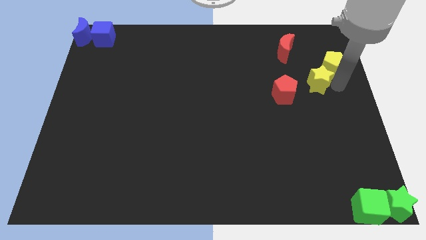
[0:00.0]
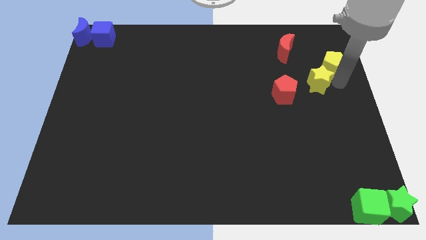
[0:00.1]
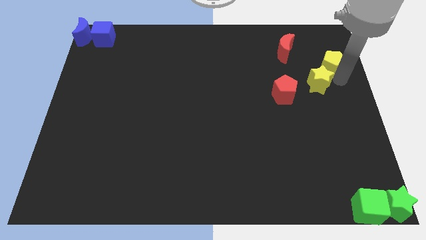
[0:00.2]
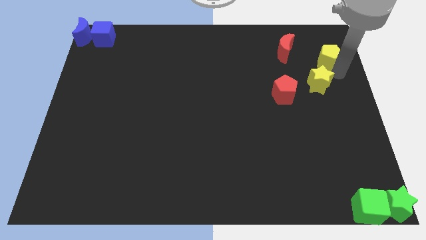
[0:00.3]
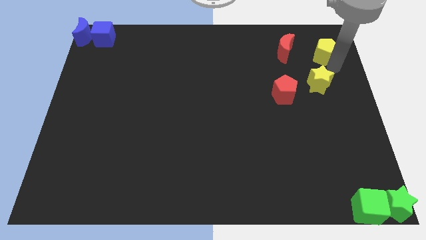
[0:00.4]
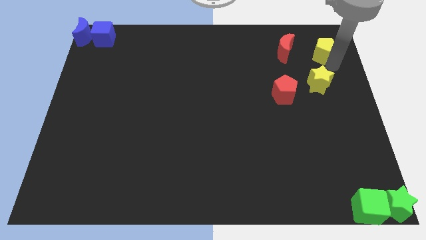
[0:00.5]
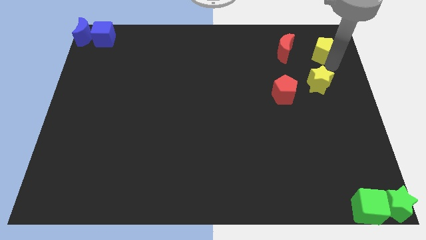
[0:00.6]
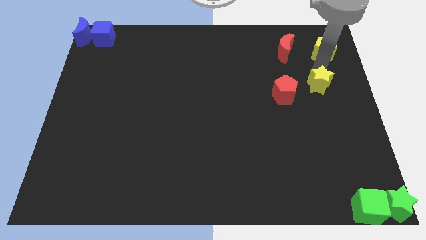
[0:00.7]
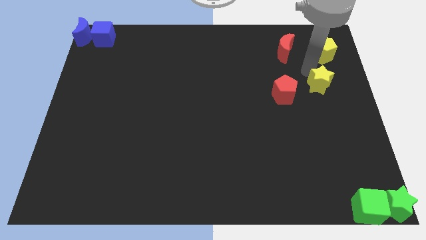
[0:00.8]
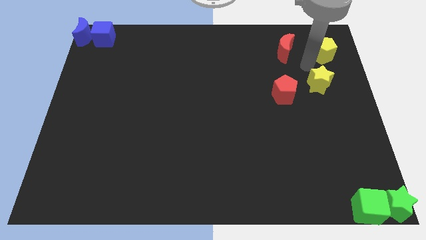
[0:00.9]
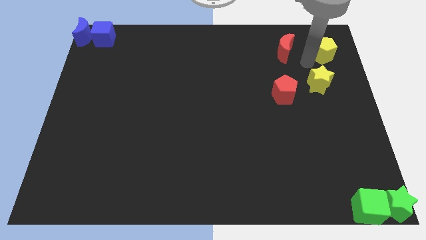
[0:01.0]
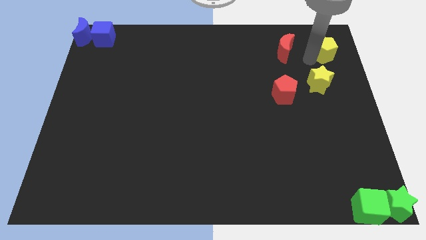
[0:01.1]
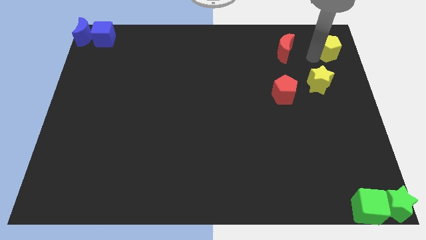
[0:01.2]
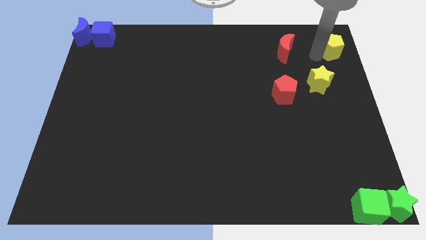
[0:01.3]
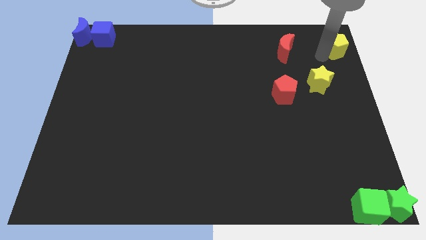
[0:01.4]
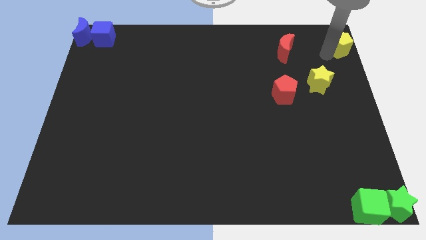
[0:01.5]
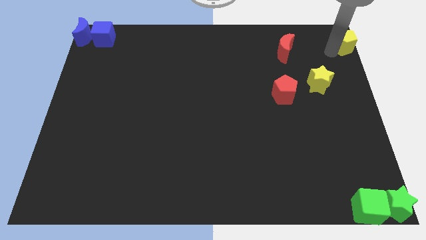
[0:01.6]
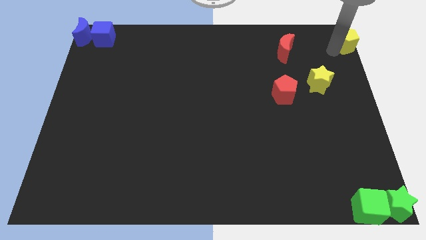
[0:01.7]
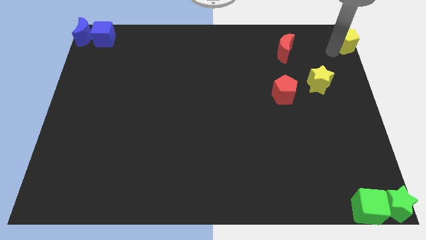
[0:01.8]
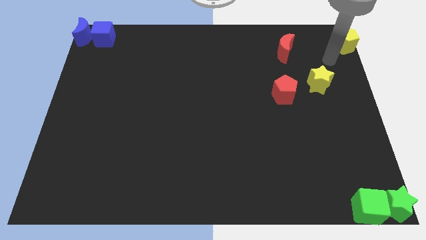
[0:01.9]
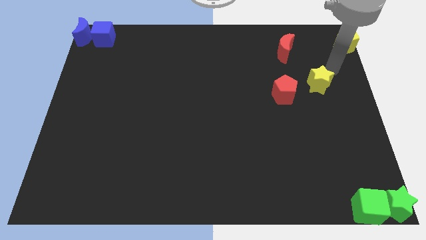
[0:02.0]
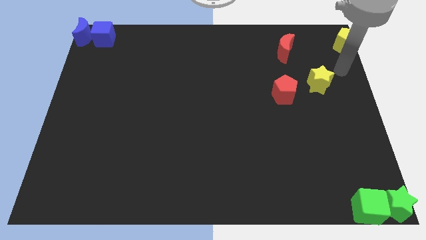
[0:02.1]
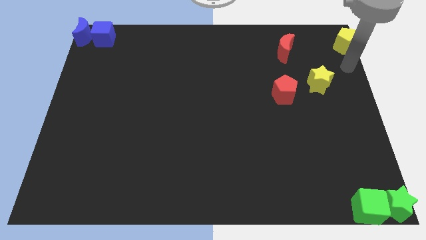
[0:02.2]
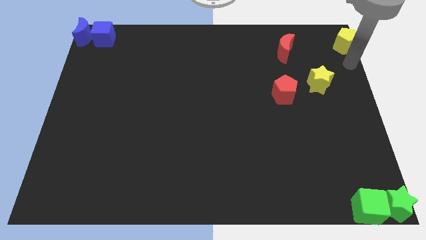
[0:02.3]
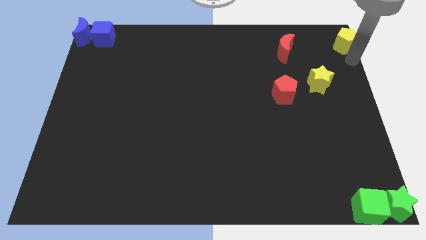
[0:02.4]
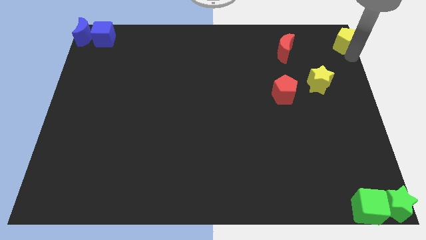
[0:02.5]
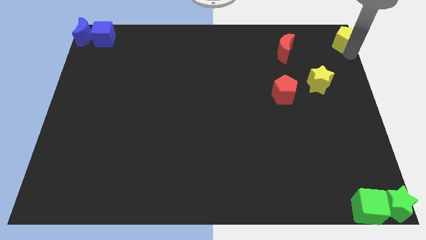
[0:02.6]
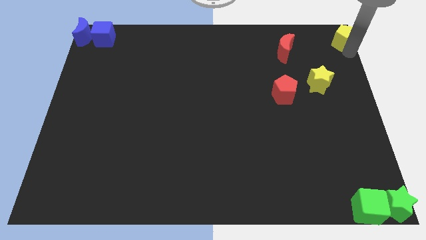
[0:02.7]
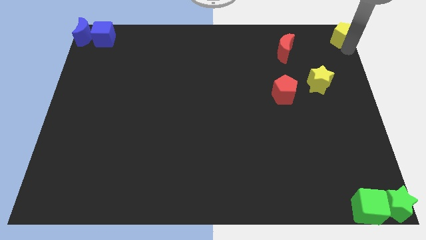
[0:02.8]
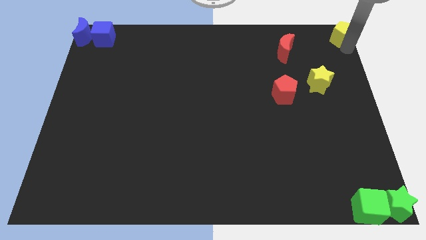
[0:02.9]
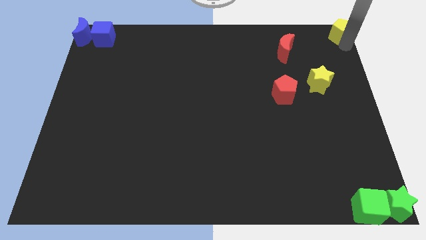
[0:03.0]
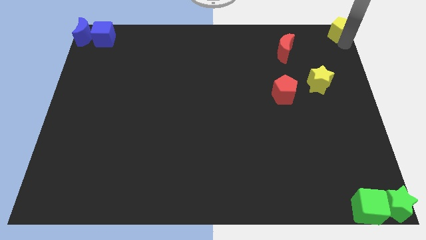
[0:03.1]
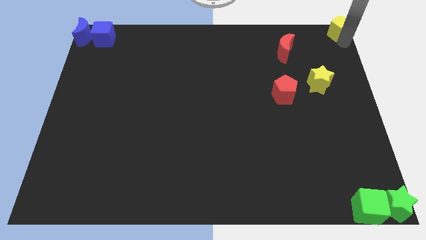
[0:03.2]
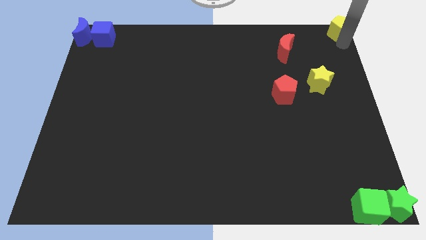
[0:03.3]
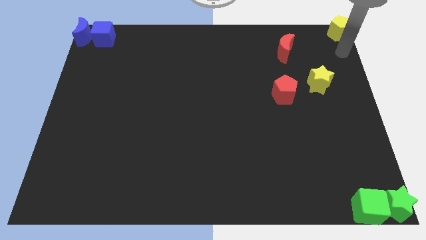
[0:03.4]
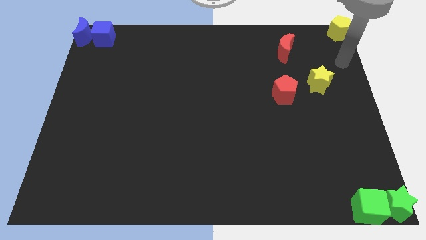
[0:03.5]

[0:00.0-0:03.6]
move the yellow pentagon to the top right corner of the board

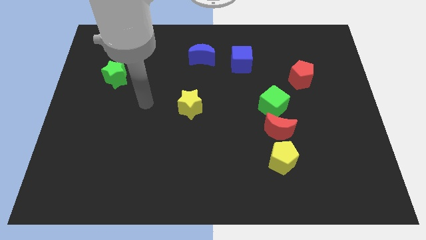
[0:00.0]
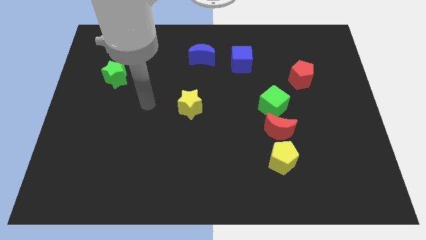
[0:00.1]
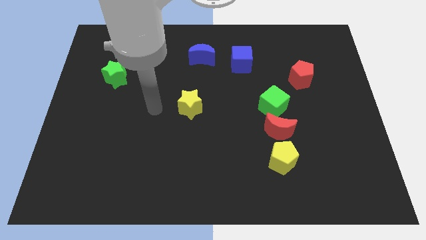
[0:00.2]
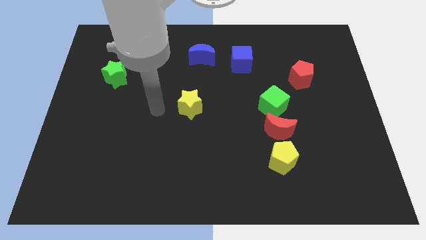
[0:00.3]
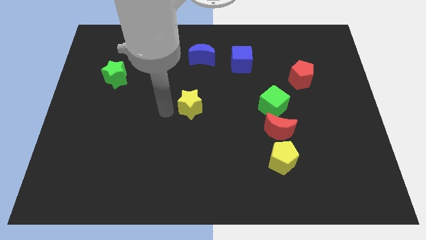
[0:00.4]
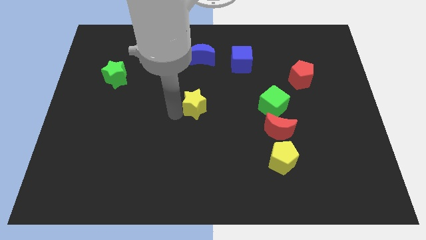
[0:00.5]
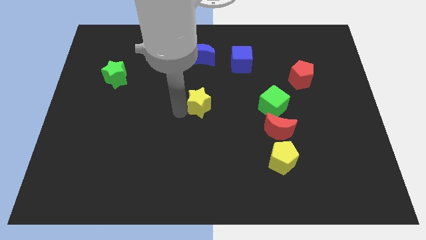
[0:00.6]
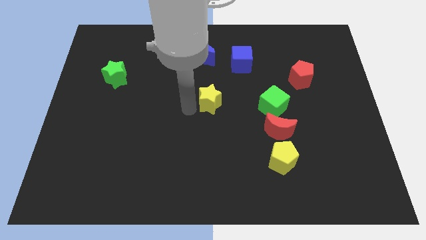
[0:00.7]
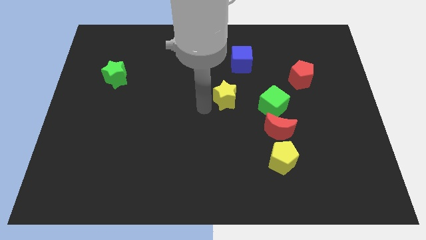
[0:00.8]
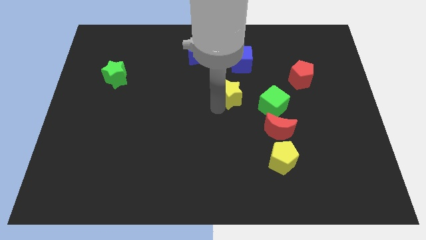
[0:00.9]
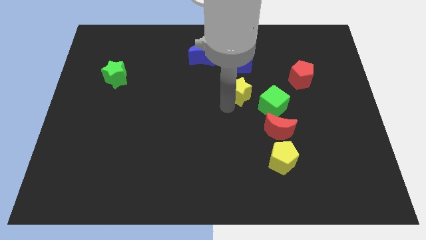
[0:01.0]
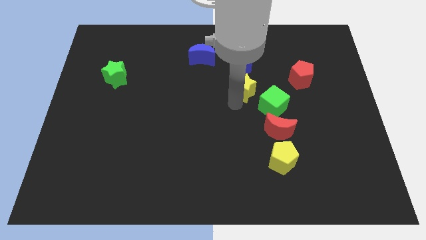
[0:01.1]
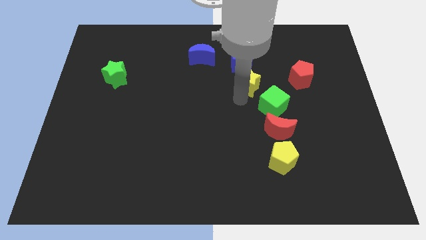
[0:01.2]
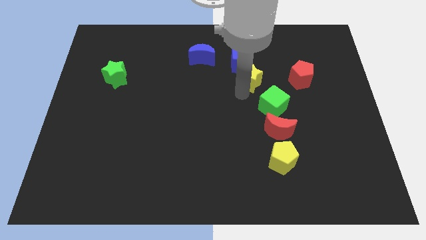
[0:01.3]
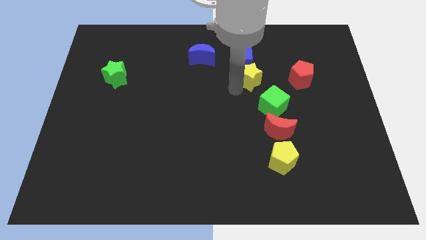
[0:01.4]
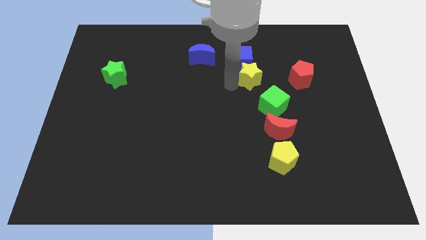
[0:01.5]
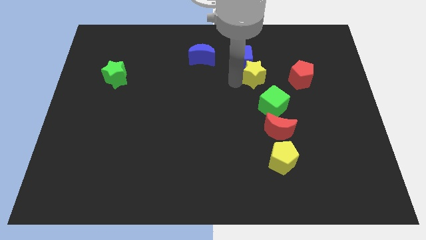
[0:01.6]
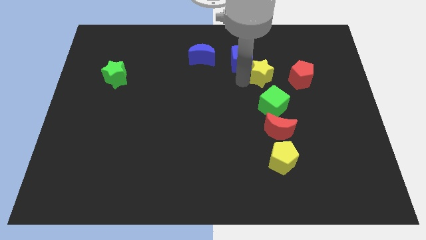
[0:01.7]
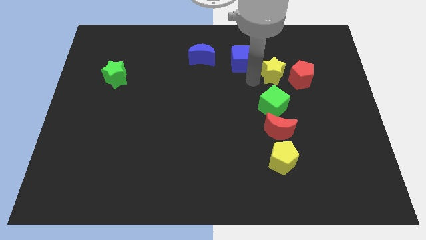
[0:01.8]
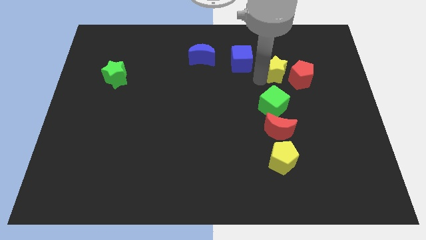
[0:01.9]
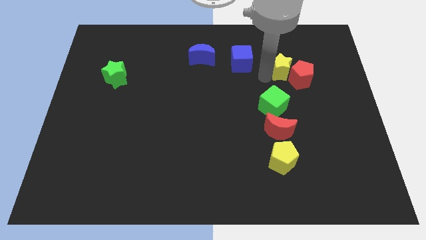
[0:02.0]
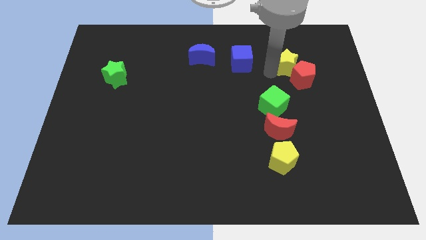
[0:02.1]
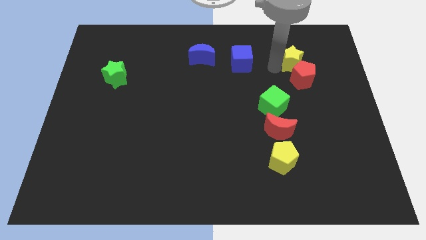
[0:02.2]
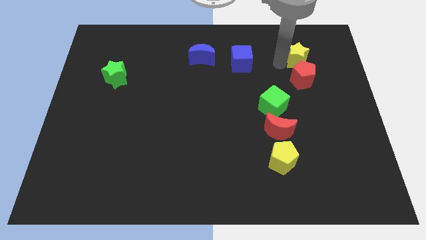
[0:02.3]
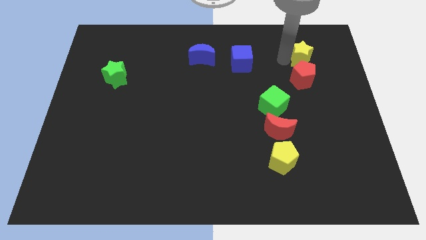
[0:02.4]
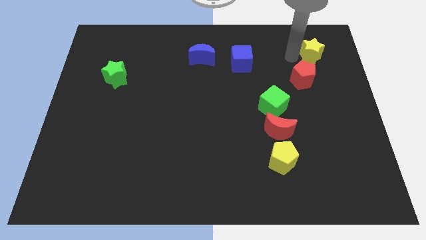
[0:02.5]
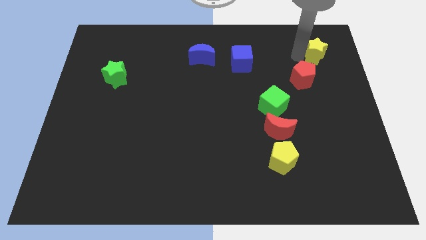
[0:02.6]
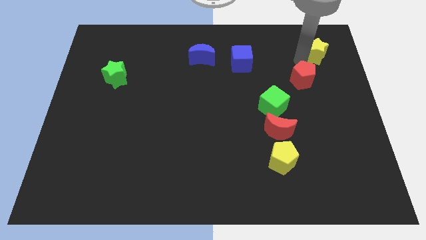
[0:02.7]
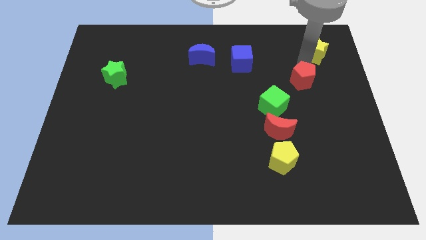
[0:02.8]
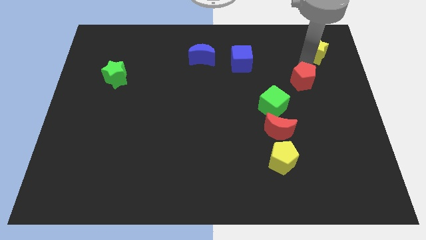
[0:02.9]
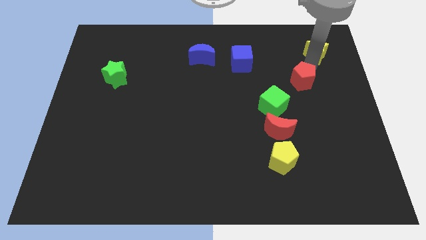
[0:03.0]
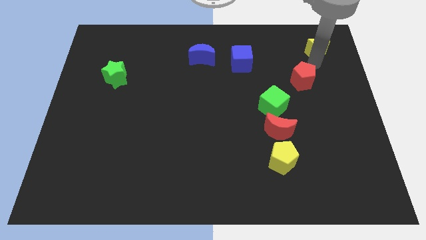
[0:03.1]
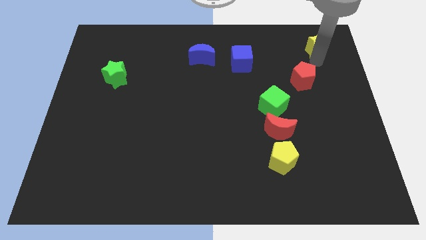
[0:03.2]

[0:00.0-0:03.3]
drag the yellow star towards the top right side of the board

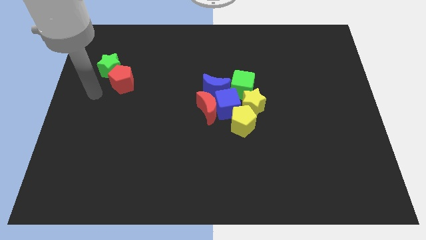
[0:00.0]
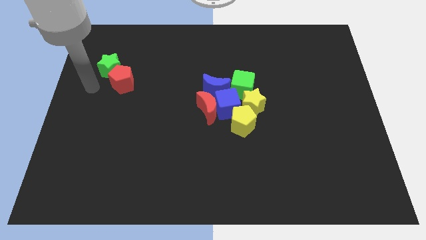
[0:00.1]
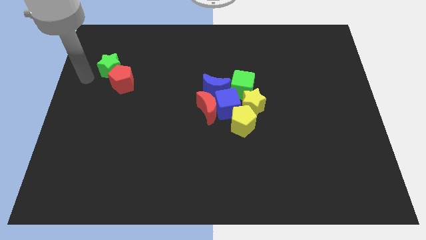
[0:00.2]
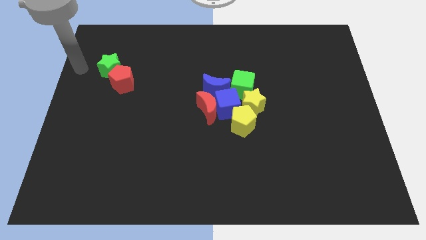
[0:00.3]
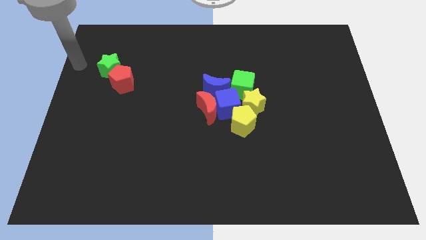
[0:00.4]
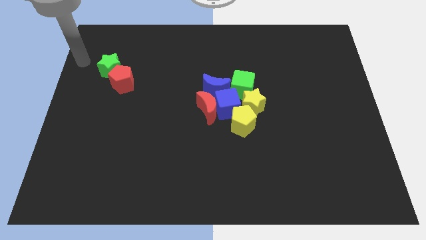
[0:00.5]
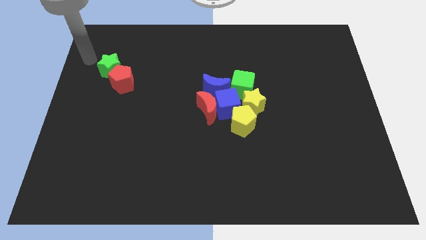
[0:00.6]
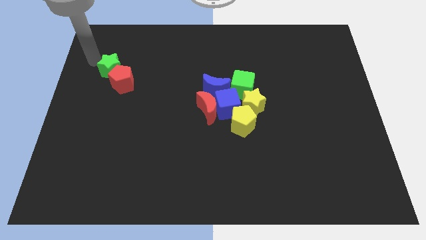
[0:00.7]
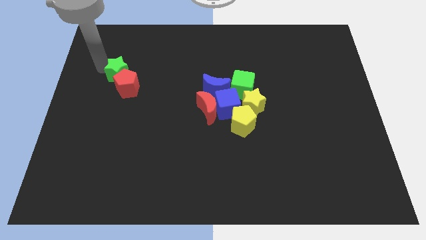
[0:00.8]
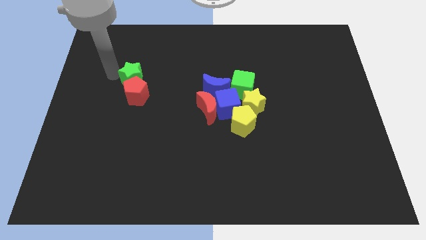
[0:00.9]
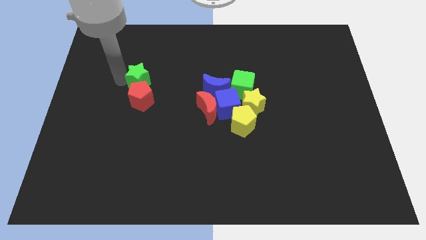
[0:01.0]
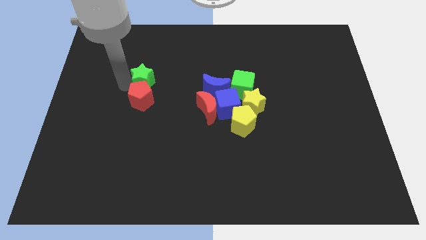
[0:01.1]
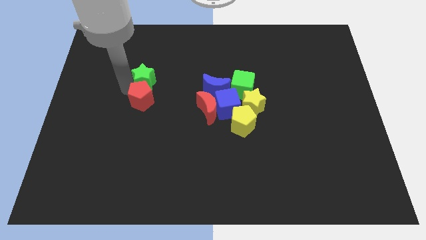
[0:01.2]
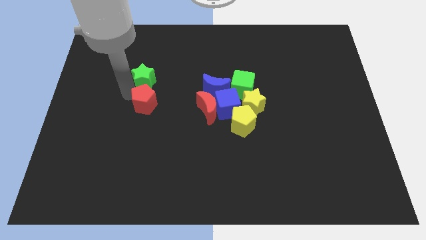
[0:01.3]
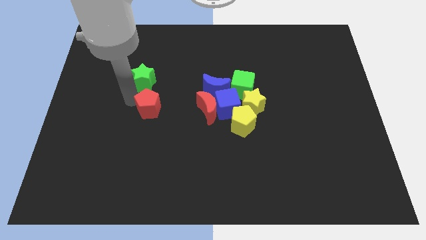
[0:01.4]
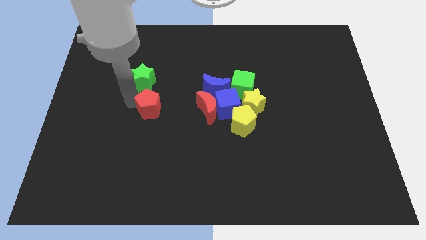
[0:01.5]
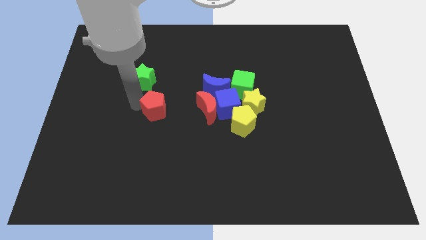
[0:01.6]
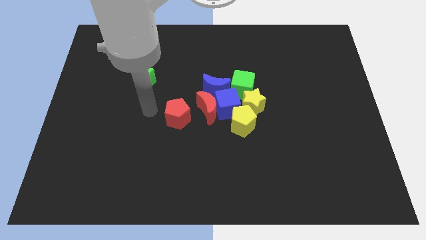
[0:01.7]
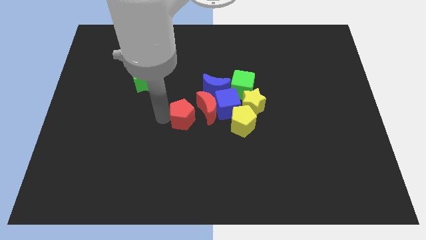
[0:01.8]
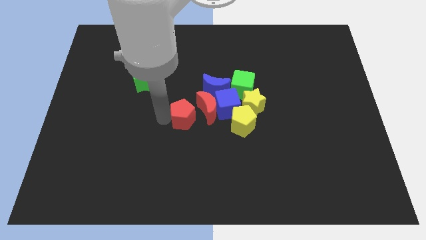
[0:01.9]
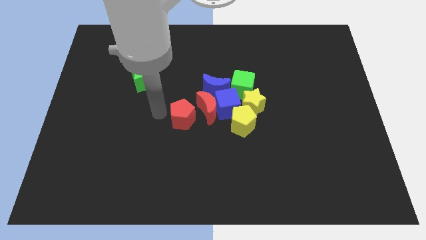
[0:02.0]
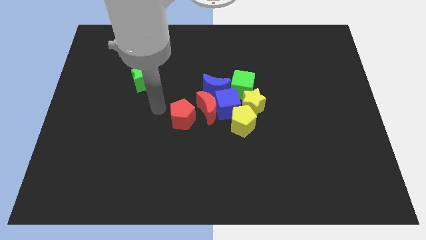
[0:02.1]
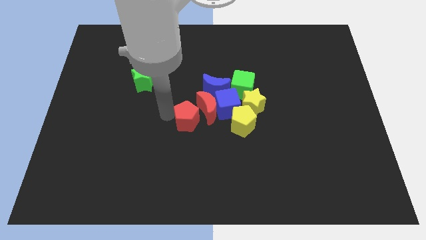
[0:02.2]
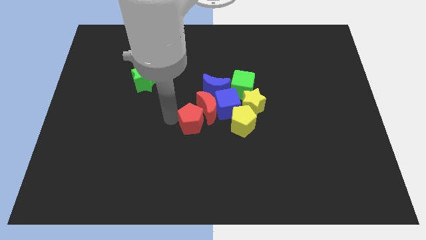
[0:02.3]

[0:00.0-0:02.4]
push the red pentagon with green star
